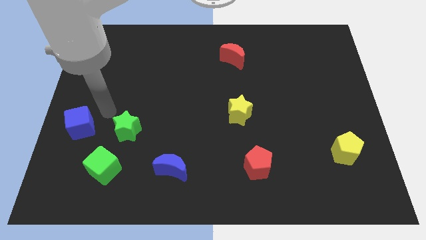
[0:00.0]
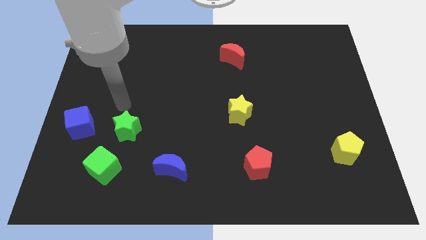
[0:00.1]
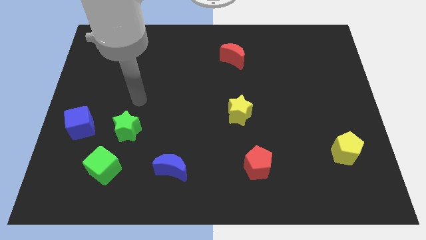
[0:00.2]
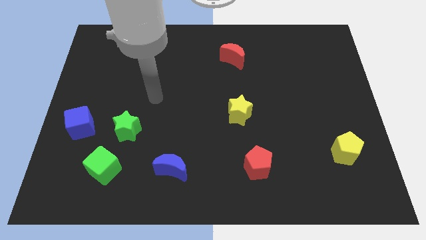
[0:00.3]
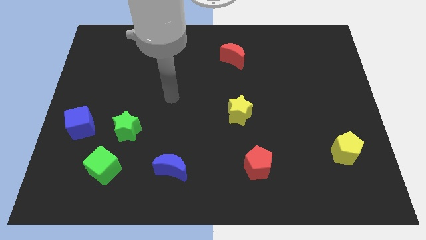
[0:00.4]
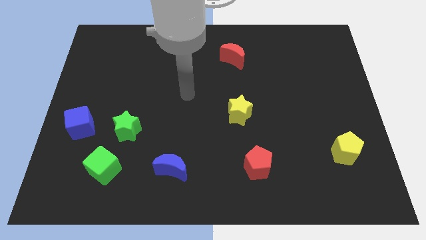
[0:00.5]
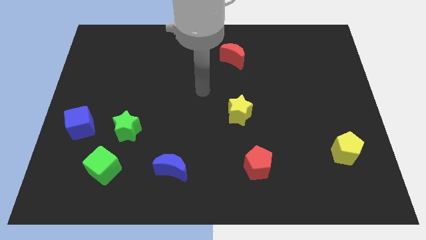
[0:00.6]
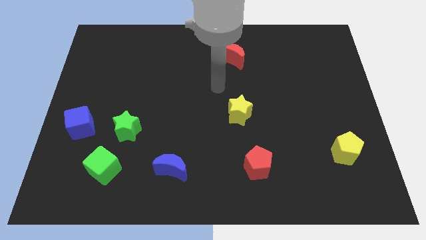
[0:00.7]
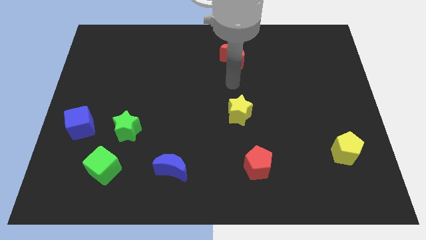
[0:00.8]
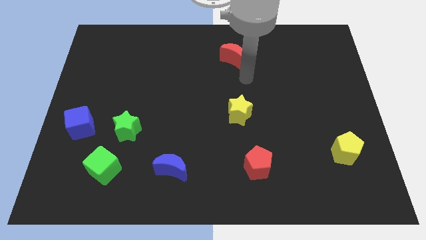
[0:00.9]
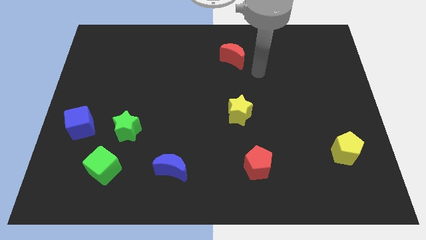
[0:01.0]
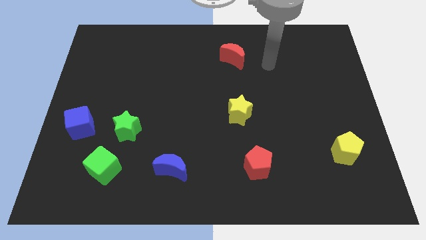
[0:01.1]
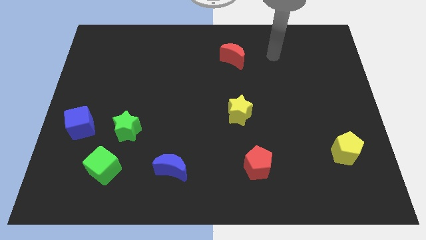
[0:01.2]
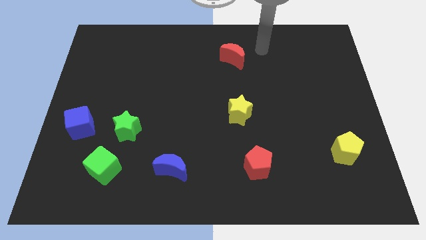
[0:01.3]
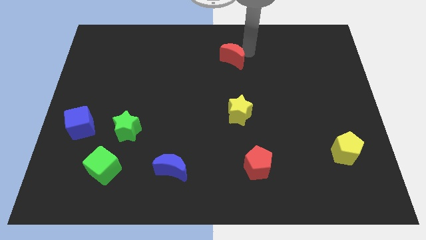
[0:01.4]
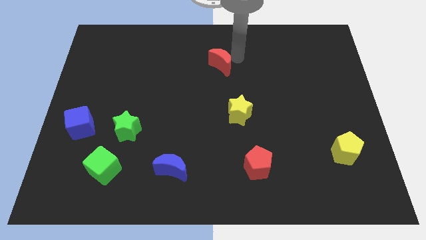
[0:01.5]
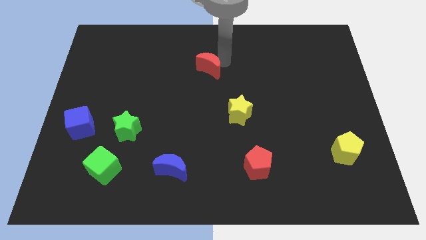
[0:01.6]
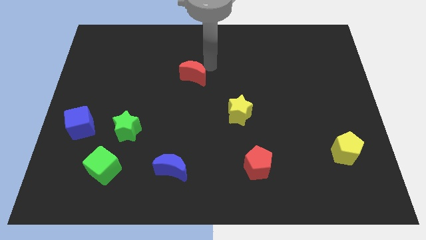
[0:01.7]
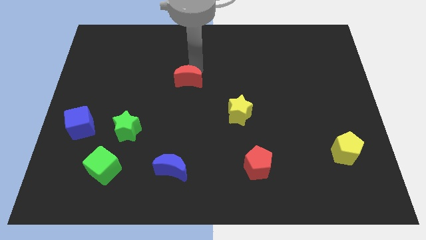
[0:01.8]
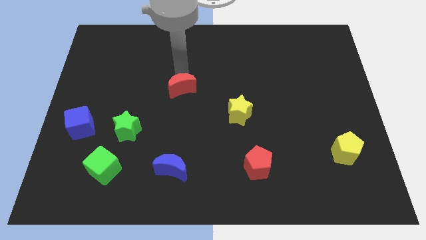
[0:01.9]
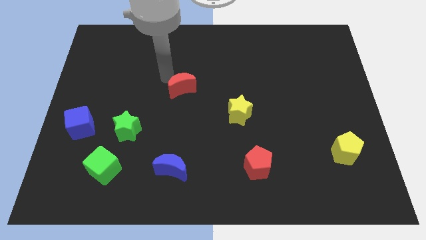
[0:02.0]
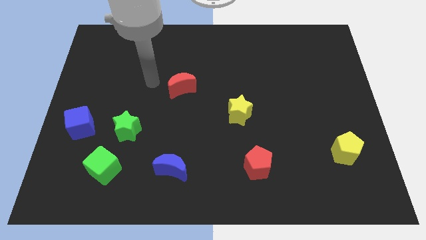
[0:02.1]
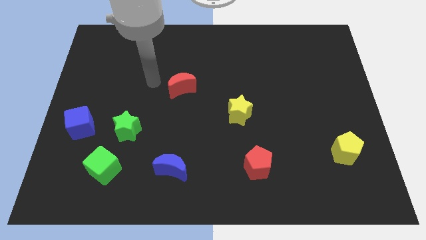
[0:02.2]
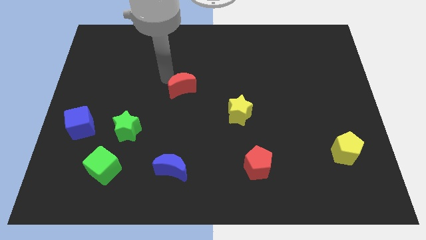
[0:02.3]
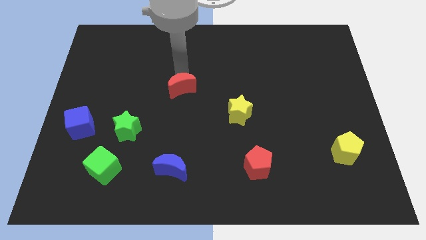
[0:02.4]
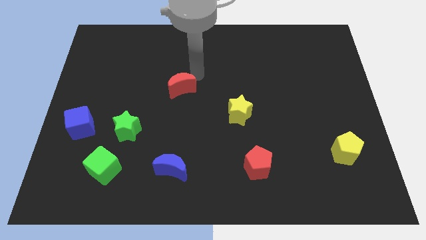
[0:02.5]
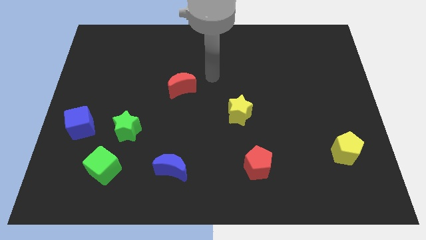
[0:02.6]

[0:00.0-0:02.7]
push the red crescent vertically above the blue moon

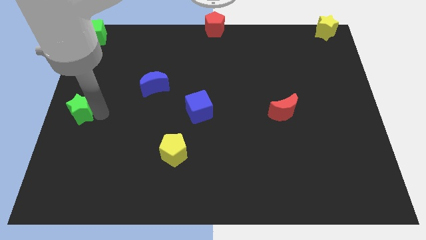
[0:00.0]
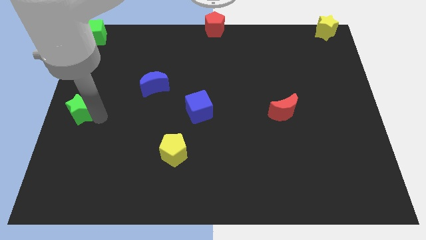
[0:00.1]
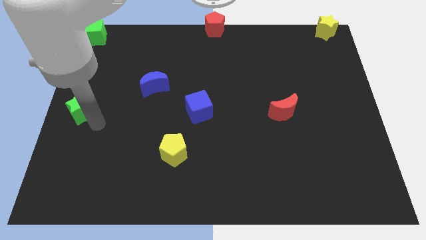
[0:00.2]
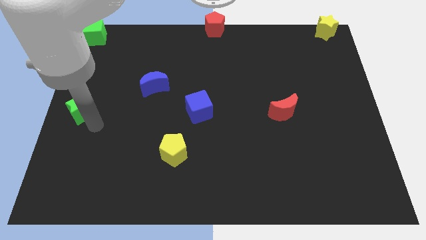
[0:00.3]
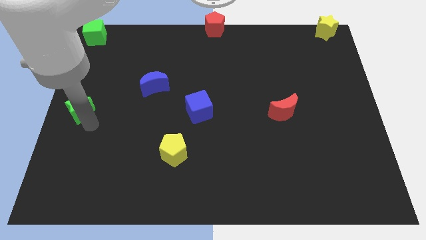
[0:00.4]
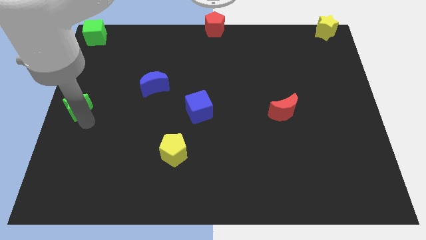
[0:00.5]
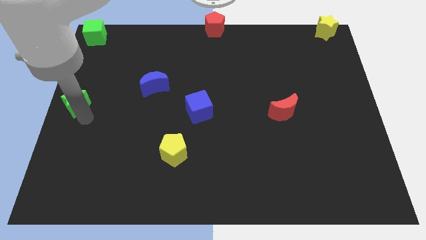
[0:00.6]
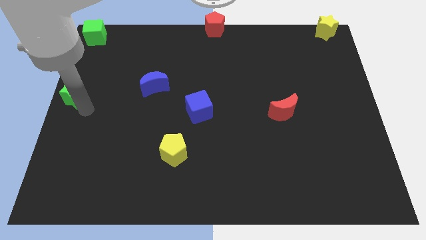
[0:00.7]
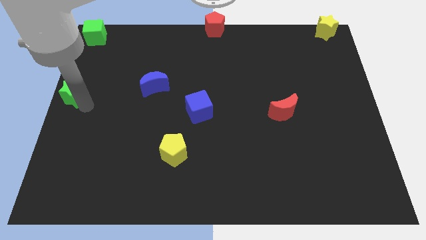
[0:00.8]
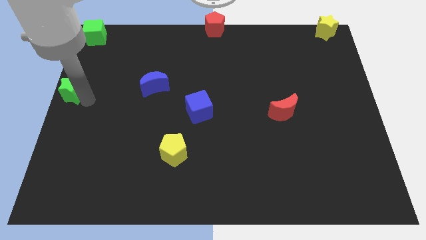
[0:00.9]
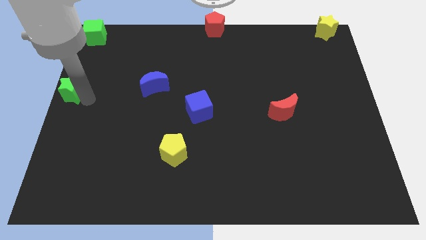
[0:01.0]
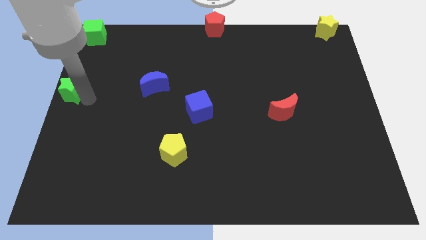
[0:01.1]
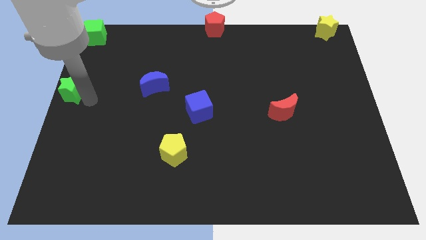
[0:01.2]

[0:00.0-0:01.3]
place the green star to the middle left

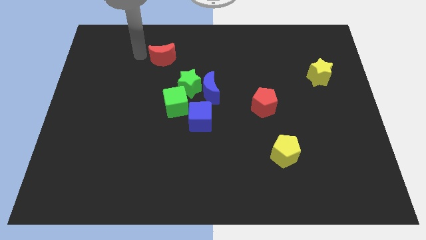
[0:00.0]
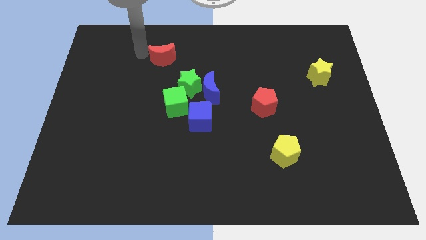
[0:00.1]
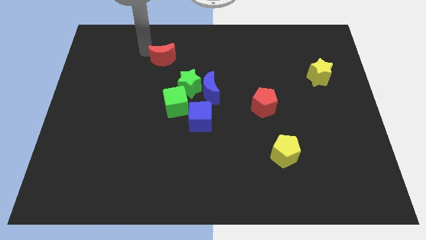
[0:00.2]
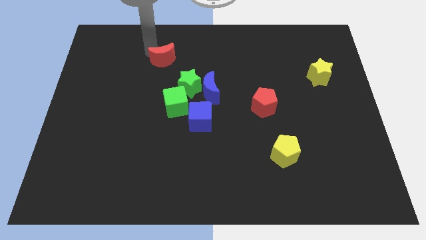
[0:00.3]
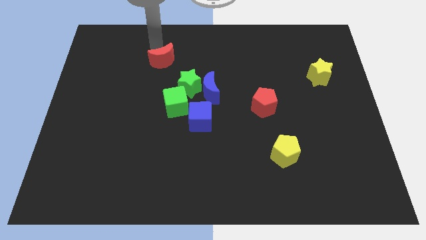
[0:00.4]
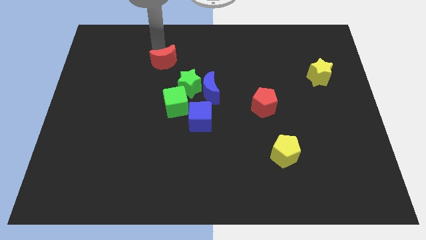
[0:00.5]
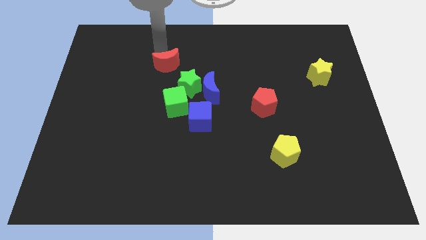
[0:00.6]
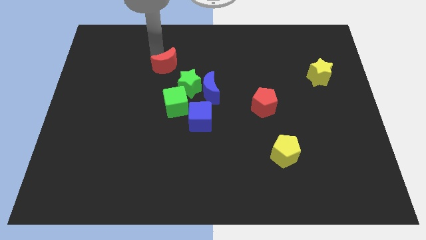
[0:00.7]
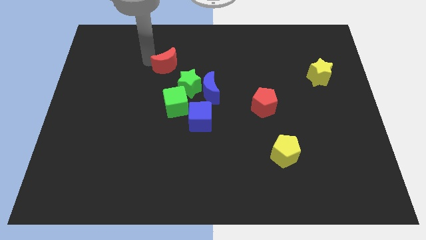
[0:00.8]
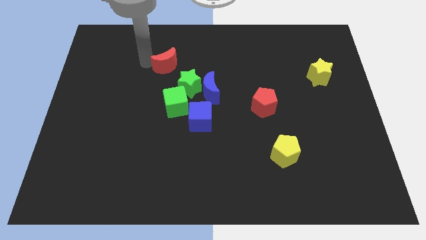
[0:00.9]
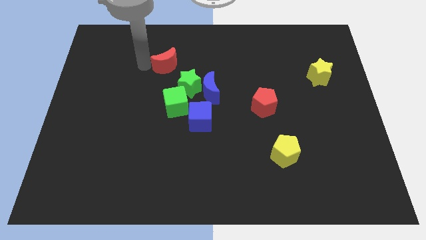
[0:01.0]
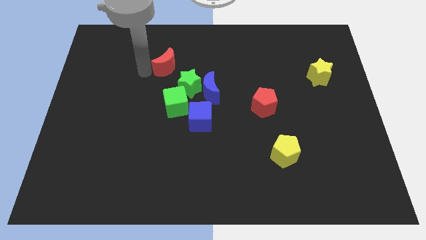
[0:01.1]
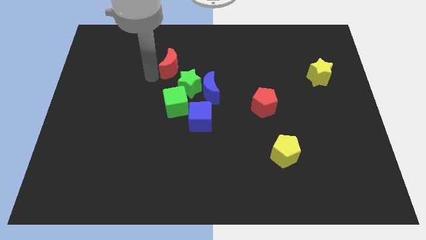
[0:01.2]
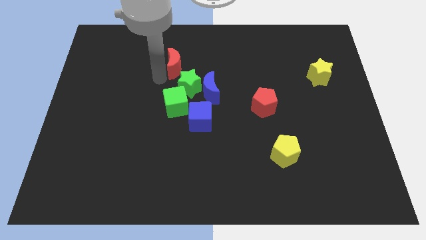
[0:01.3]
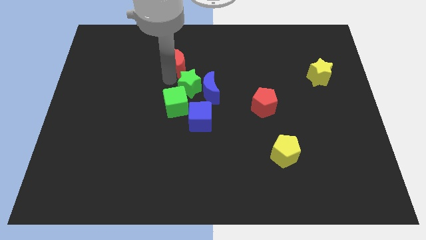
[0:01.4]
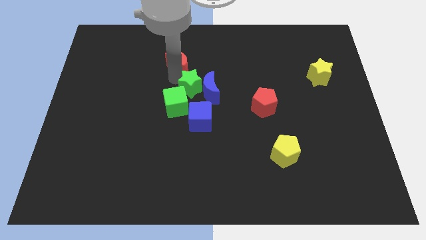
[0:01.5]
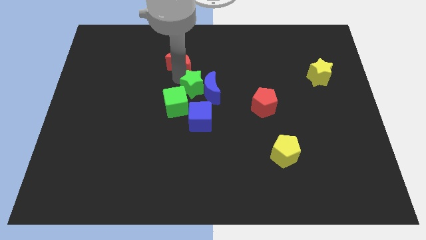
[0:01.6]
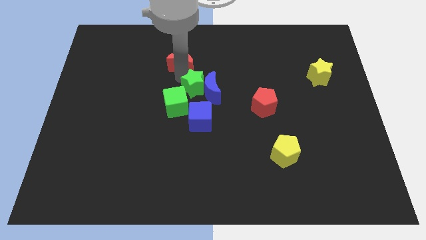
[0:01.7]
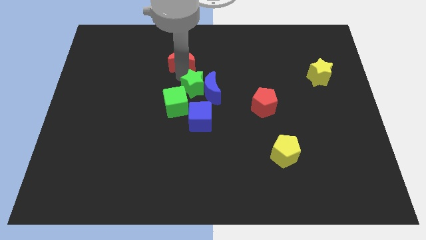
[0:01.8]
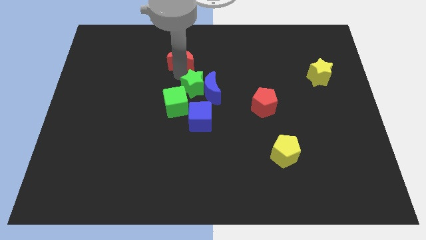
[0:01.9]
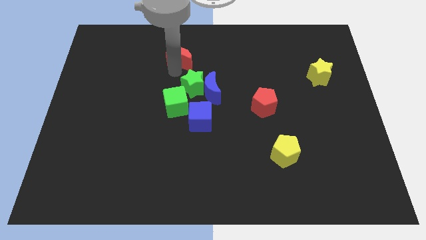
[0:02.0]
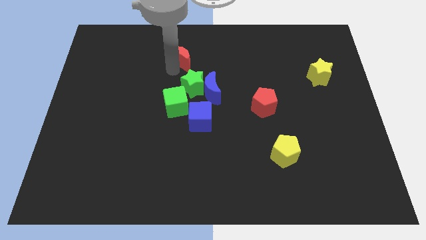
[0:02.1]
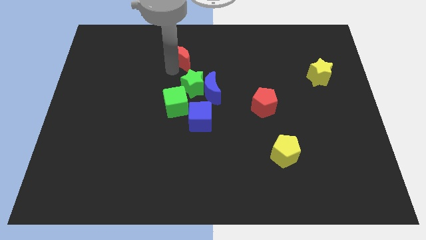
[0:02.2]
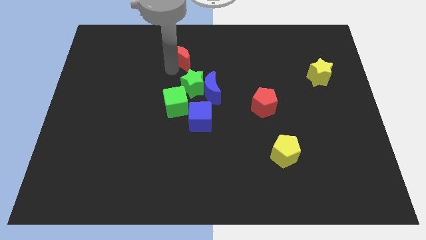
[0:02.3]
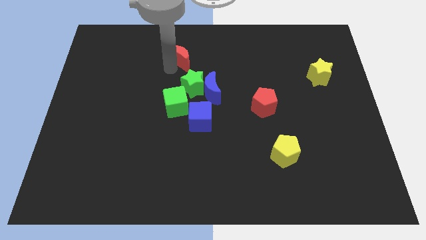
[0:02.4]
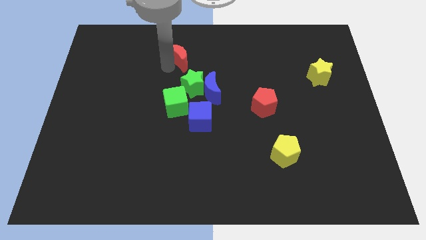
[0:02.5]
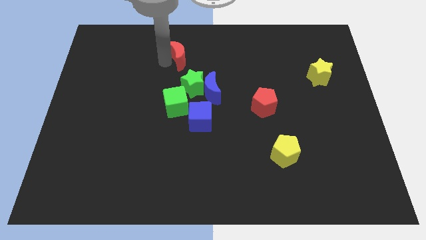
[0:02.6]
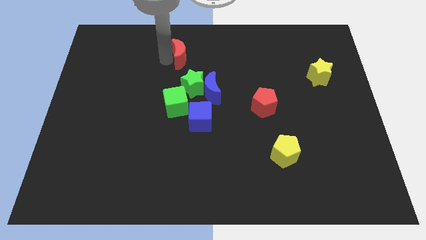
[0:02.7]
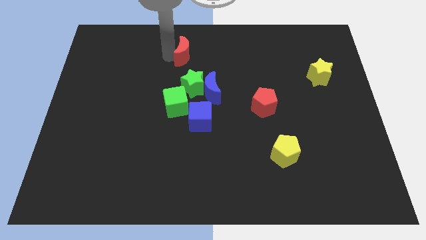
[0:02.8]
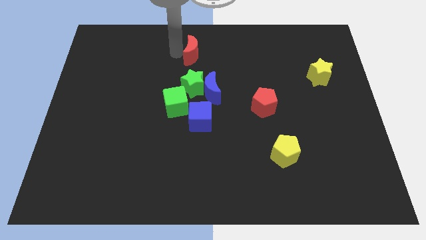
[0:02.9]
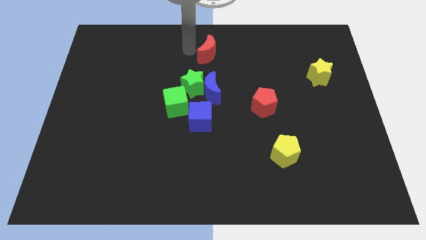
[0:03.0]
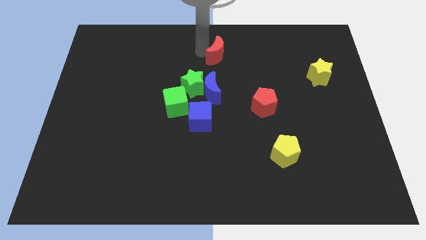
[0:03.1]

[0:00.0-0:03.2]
place the red crescent above the blue crescent

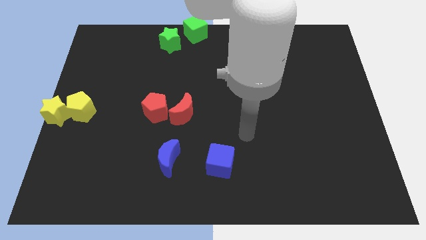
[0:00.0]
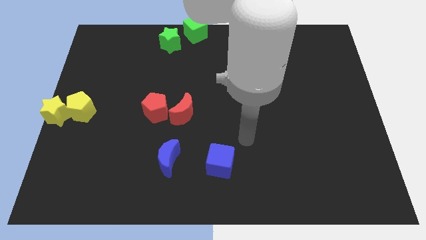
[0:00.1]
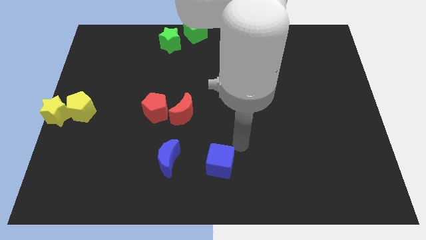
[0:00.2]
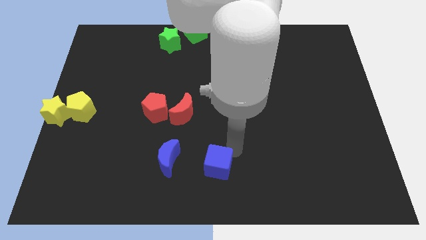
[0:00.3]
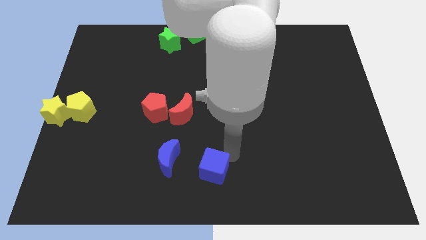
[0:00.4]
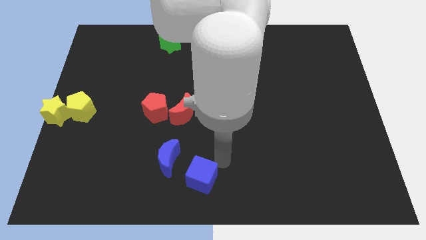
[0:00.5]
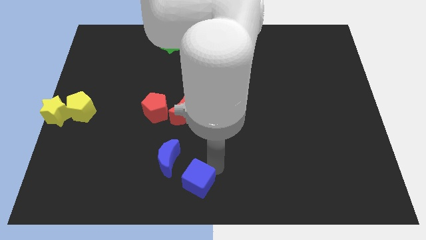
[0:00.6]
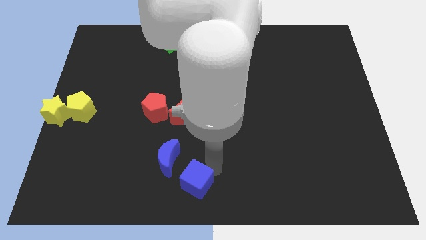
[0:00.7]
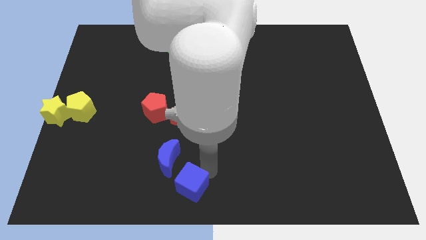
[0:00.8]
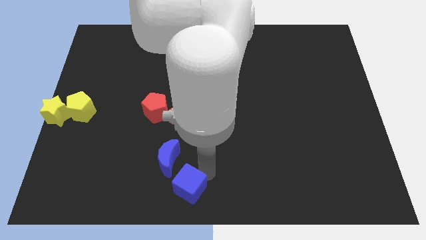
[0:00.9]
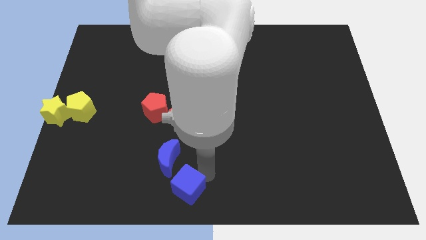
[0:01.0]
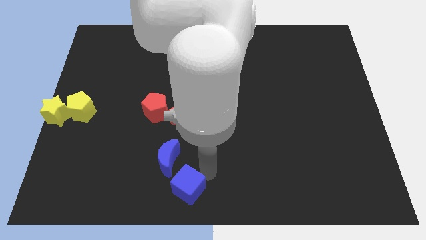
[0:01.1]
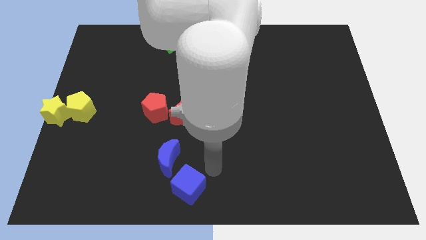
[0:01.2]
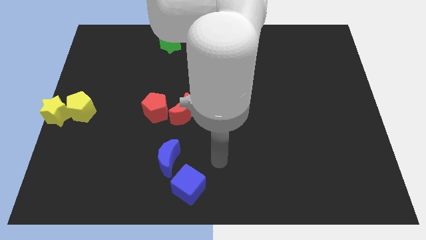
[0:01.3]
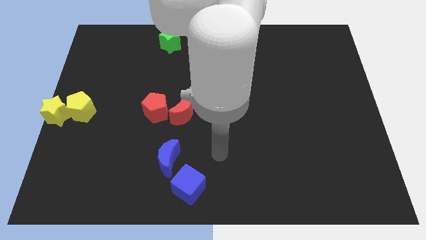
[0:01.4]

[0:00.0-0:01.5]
push the blue cube to the bottom center

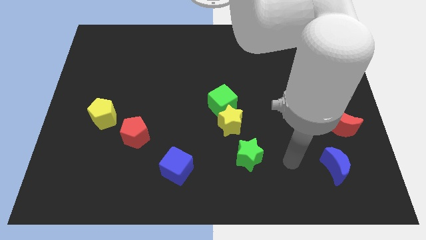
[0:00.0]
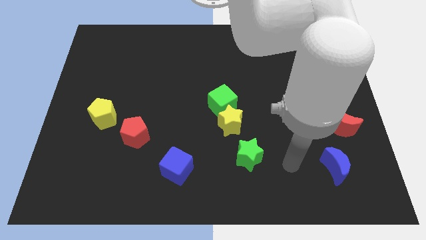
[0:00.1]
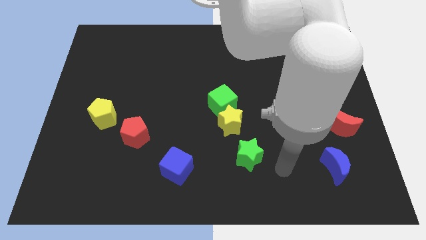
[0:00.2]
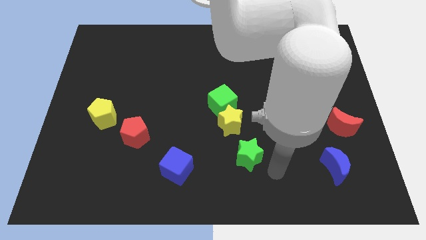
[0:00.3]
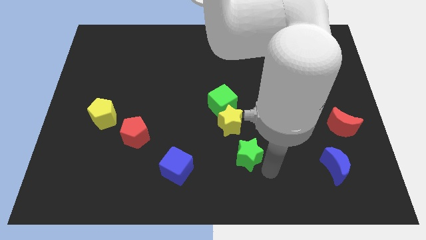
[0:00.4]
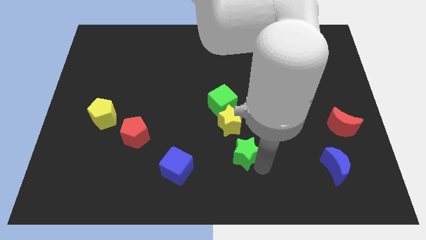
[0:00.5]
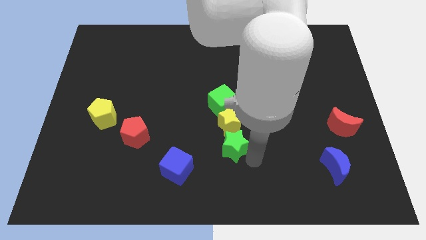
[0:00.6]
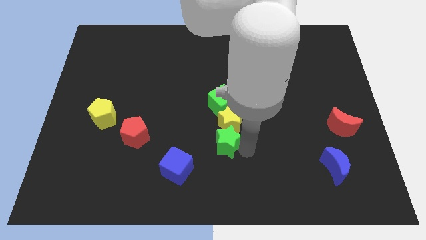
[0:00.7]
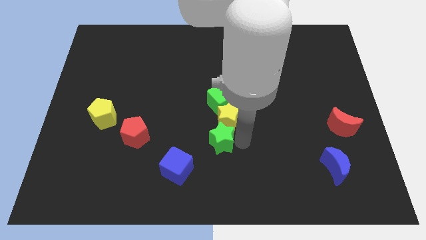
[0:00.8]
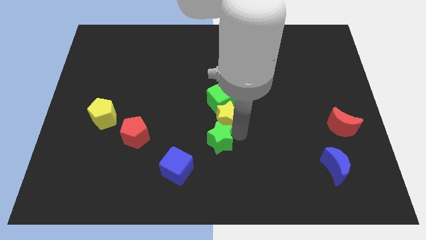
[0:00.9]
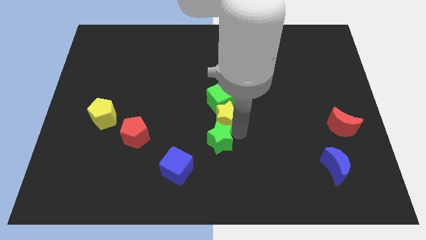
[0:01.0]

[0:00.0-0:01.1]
push the green star into the yellow star
